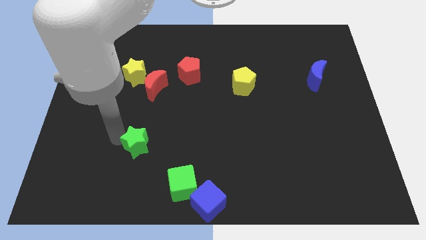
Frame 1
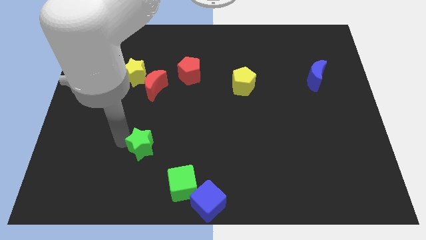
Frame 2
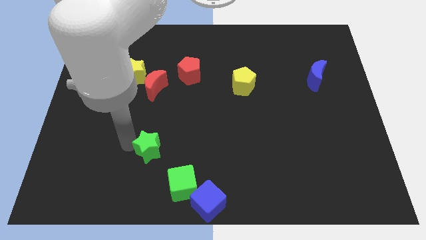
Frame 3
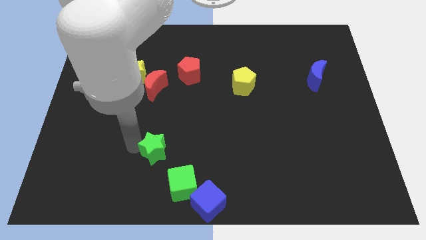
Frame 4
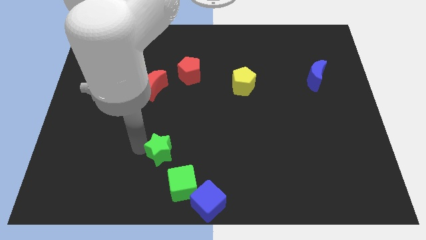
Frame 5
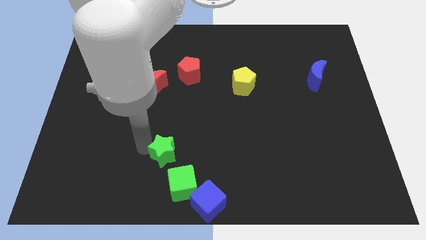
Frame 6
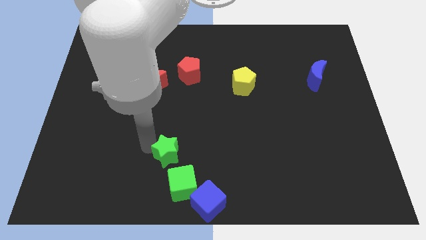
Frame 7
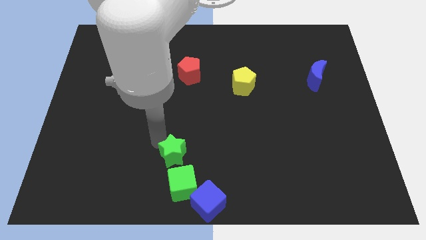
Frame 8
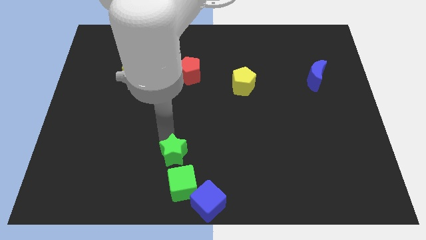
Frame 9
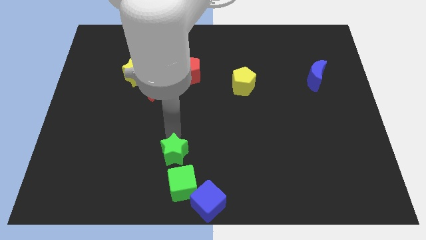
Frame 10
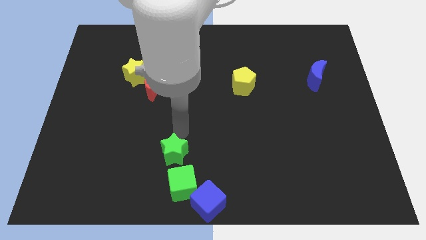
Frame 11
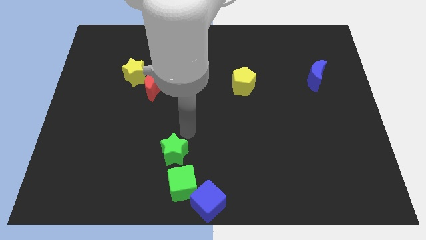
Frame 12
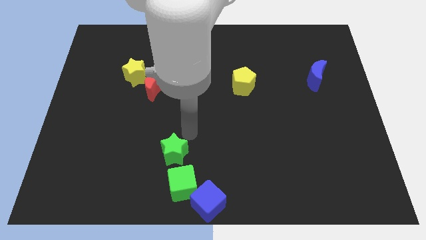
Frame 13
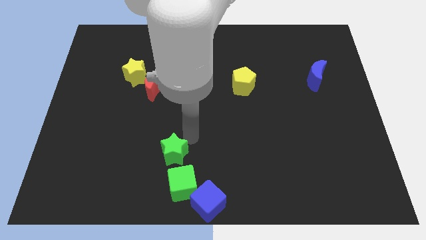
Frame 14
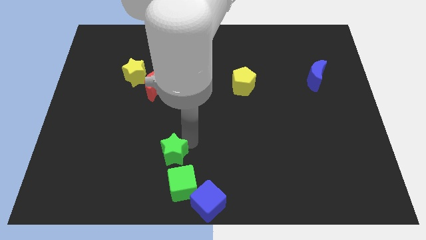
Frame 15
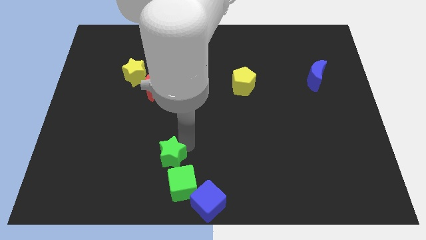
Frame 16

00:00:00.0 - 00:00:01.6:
push the green star on top of the green block

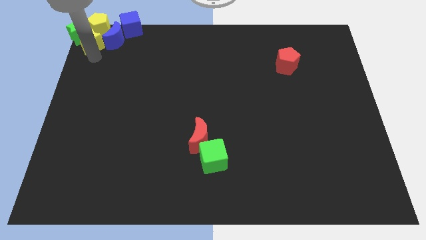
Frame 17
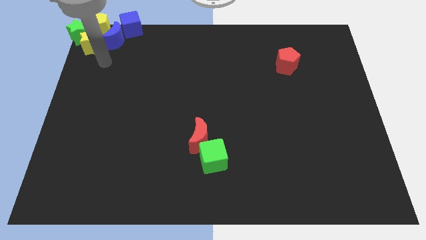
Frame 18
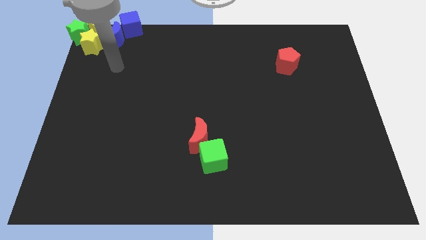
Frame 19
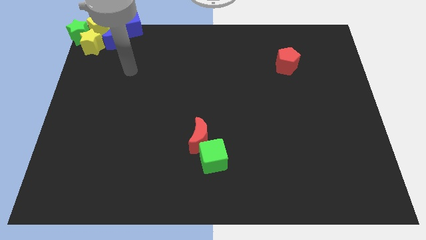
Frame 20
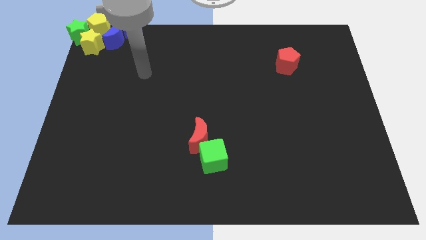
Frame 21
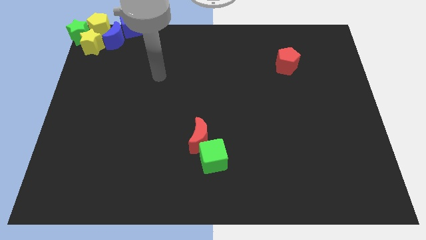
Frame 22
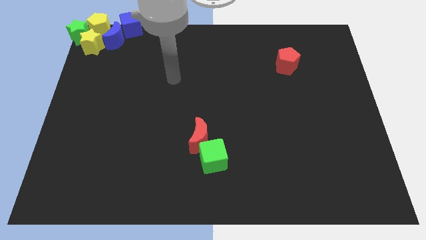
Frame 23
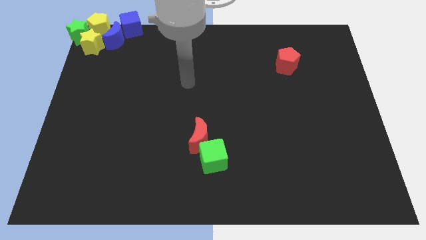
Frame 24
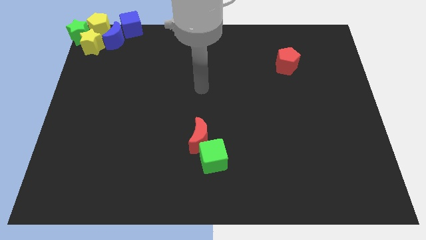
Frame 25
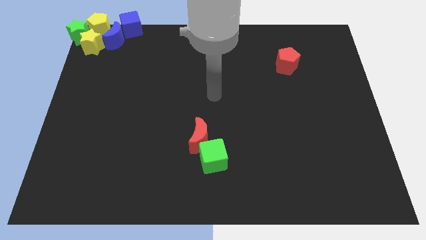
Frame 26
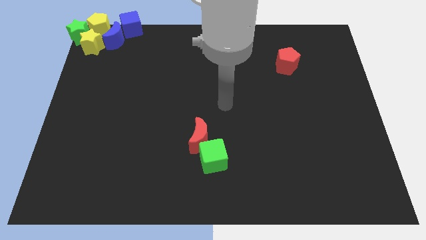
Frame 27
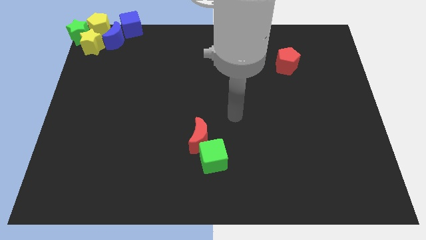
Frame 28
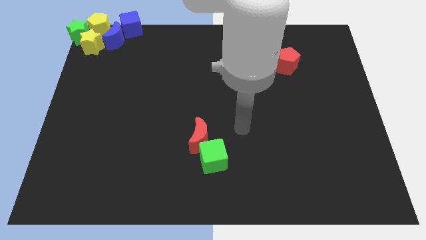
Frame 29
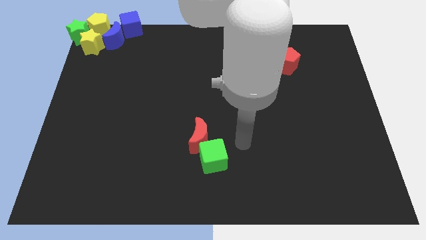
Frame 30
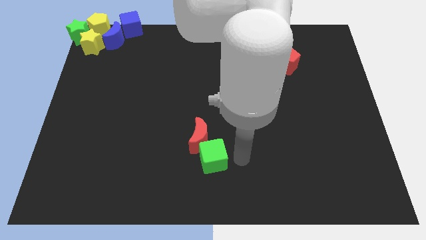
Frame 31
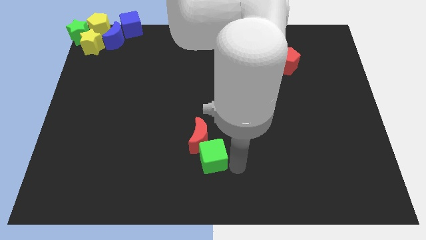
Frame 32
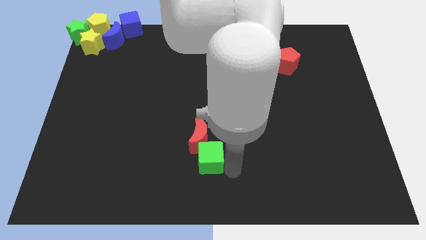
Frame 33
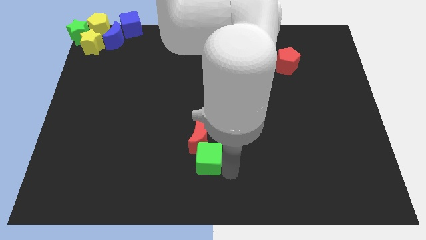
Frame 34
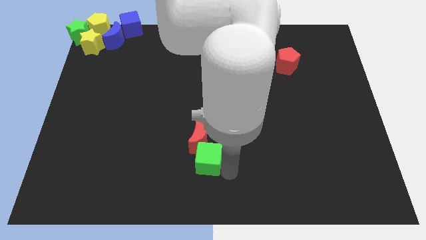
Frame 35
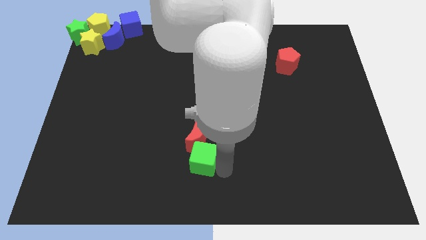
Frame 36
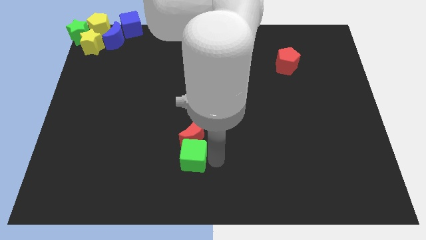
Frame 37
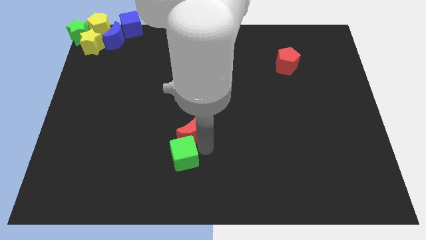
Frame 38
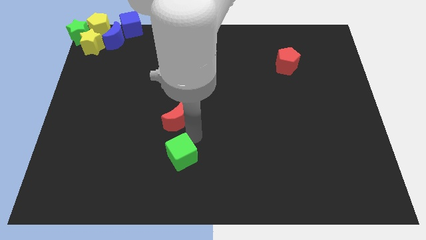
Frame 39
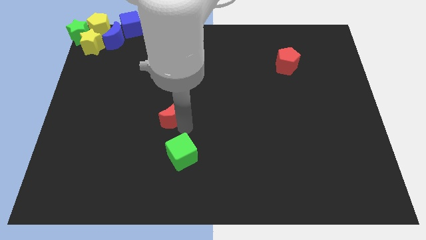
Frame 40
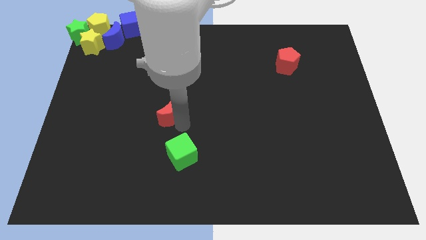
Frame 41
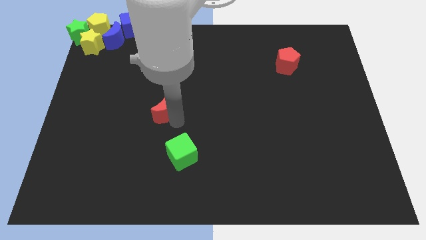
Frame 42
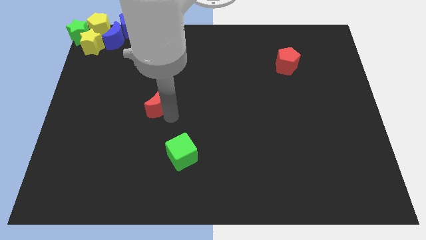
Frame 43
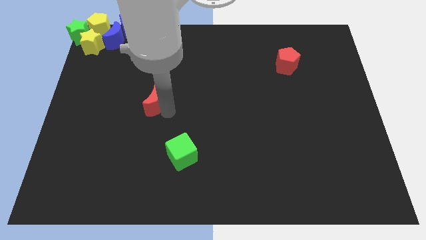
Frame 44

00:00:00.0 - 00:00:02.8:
separate the red crescent from the green cube

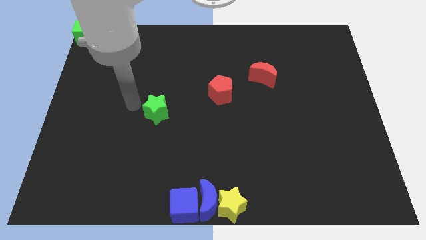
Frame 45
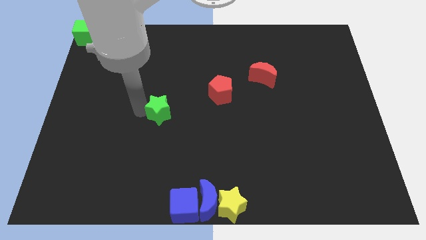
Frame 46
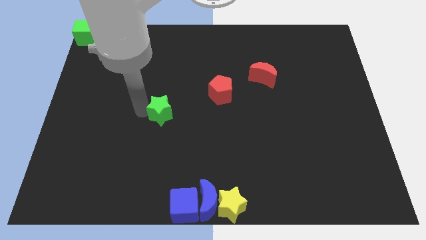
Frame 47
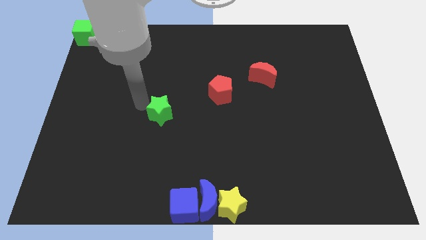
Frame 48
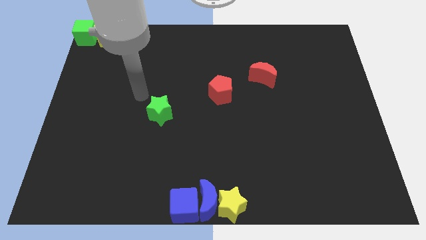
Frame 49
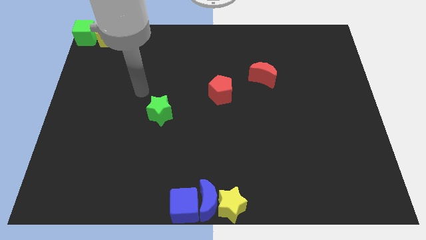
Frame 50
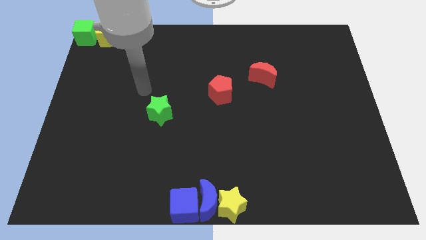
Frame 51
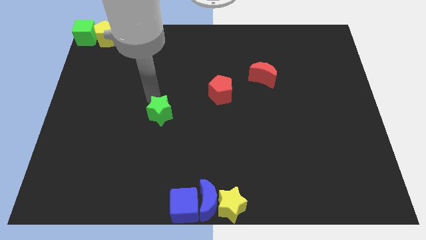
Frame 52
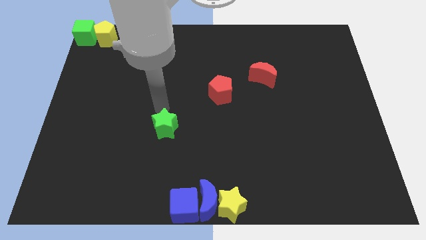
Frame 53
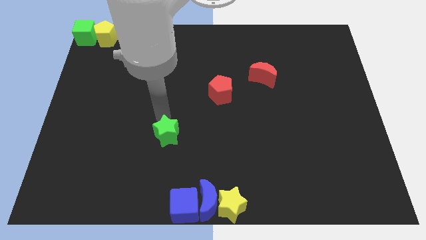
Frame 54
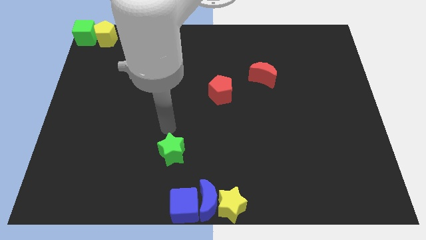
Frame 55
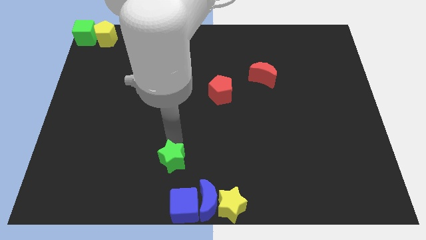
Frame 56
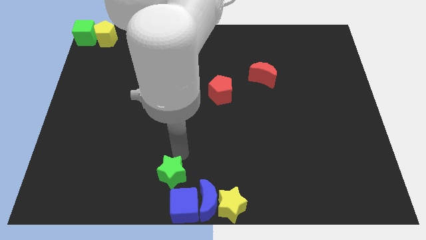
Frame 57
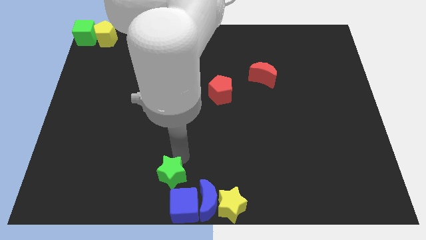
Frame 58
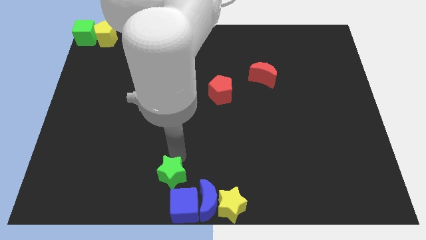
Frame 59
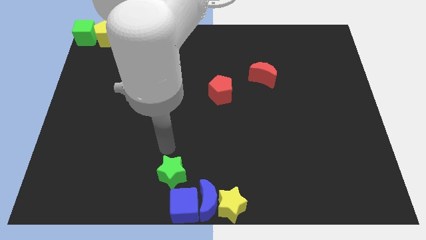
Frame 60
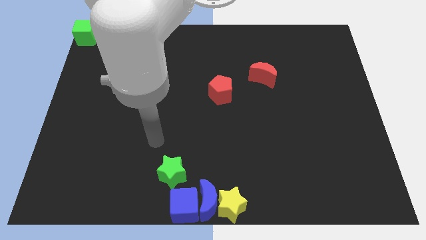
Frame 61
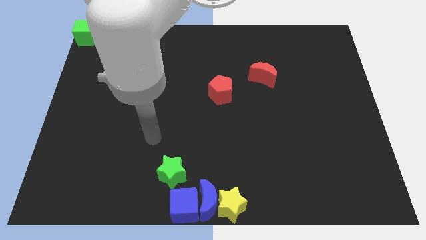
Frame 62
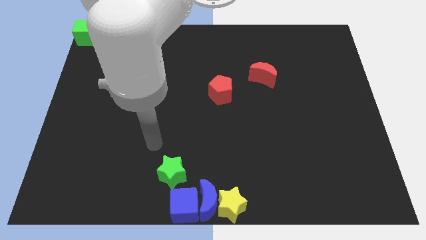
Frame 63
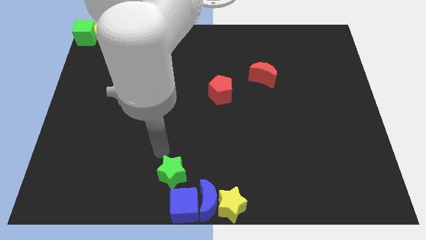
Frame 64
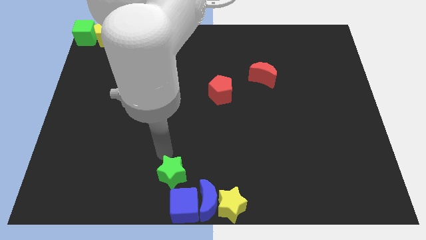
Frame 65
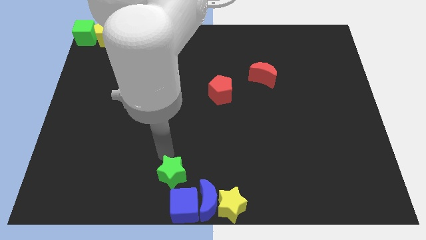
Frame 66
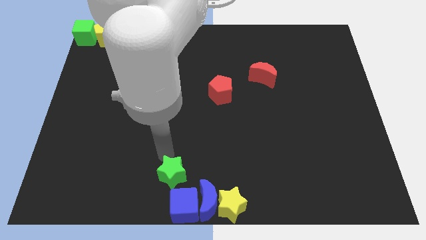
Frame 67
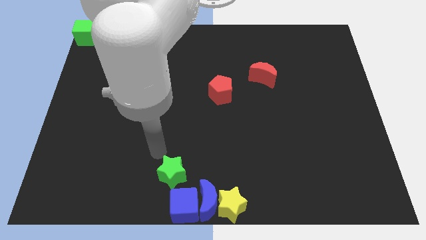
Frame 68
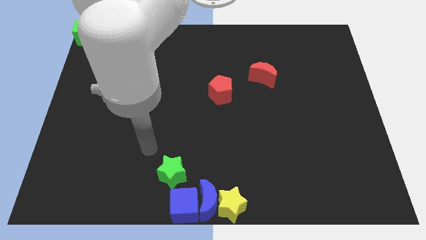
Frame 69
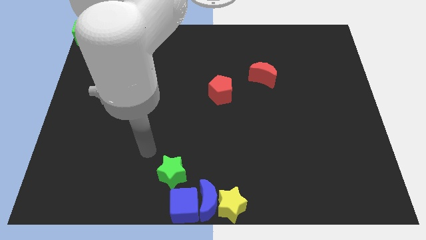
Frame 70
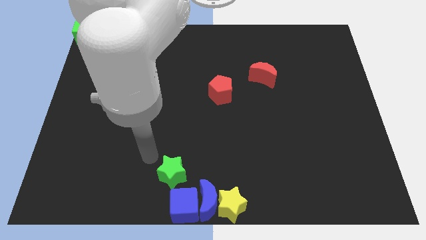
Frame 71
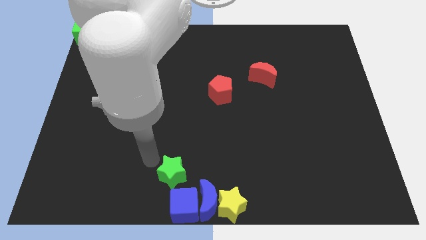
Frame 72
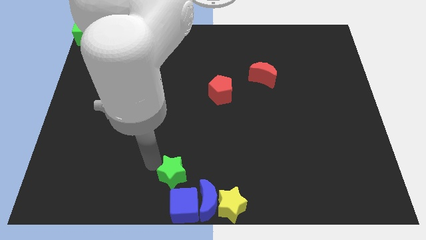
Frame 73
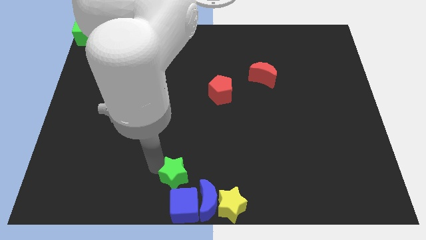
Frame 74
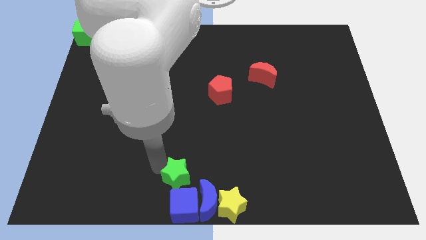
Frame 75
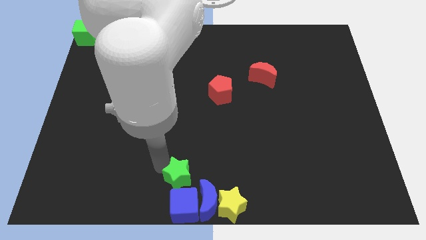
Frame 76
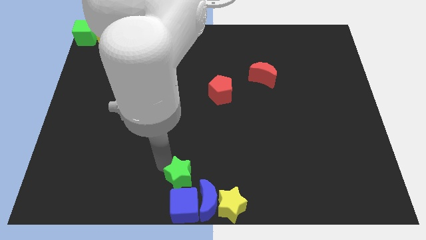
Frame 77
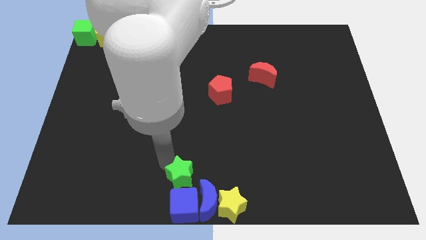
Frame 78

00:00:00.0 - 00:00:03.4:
move the green star above the blue cube at the bottom

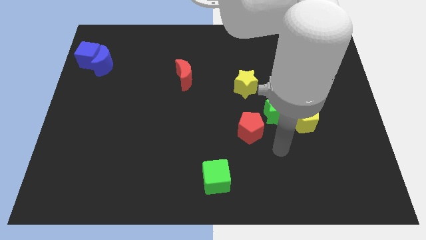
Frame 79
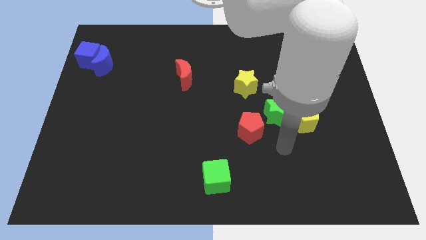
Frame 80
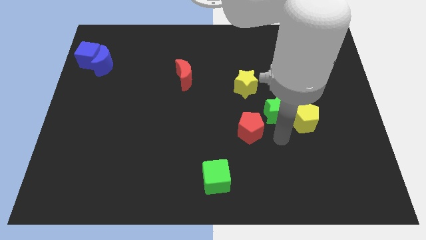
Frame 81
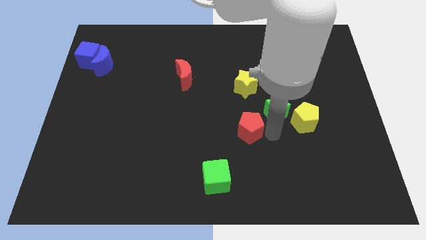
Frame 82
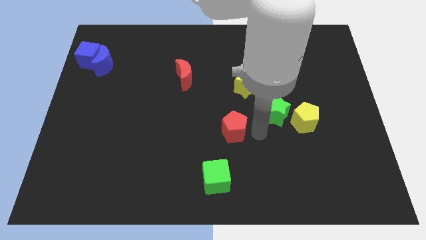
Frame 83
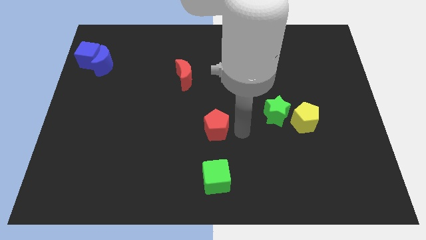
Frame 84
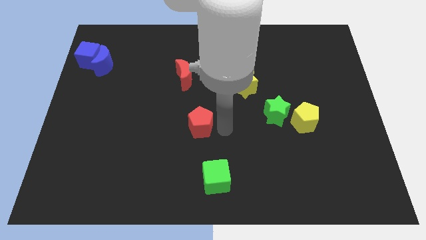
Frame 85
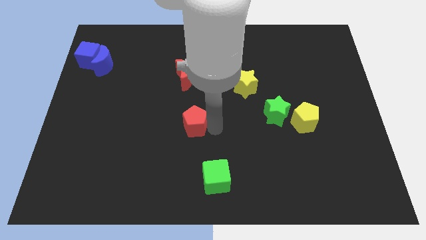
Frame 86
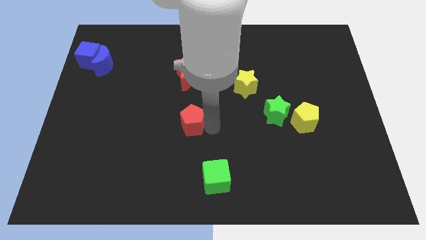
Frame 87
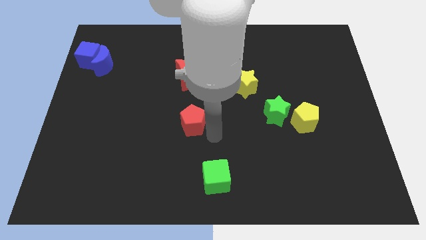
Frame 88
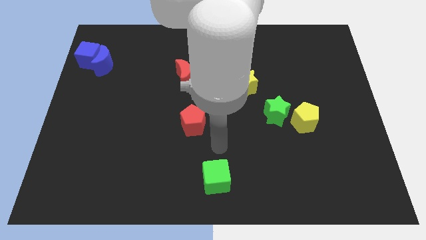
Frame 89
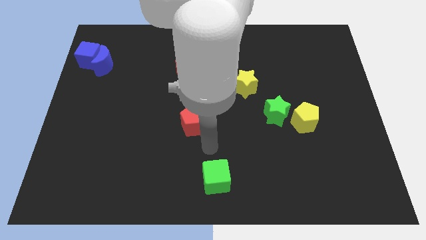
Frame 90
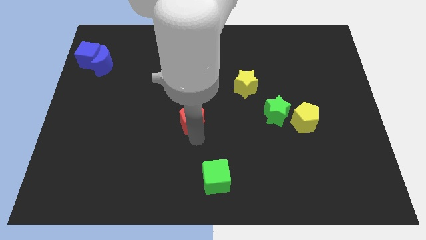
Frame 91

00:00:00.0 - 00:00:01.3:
push the red pentagon diagonally on the top left side of the green cube
